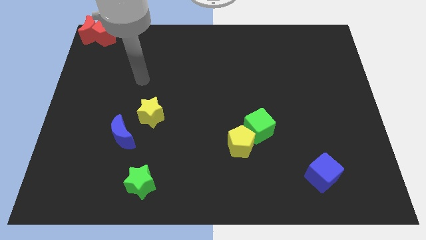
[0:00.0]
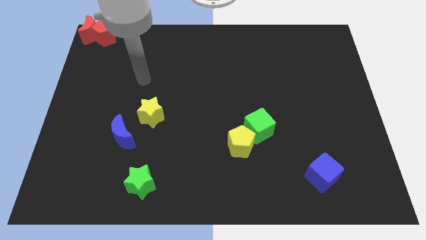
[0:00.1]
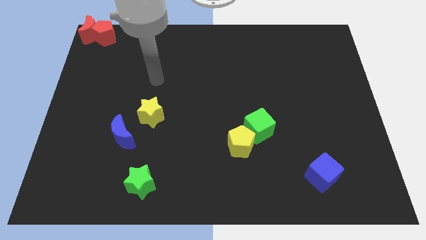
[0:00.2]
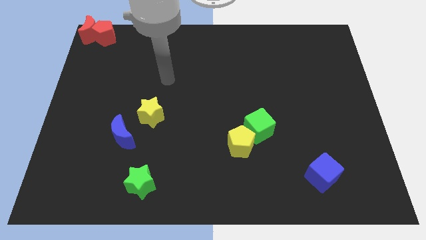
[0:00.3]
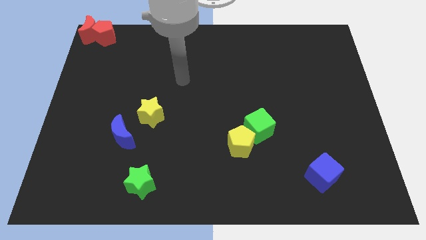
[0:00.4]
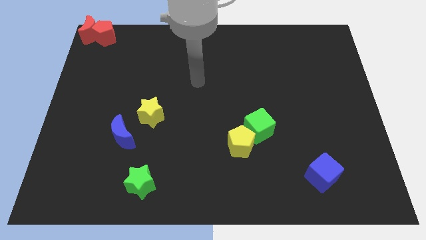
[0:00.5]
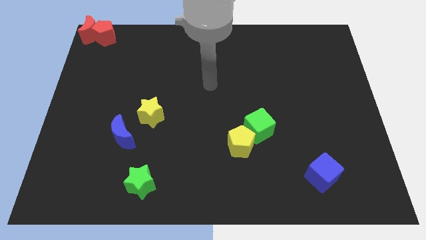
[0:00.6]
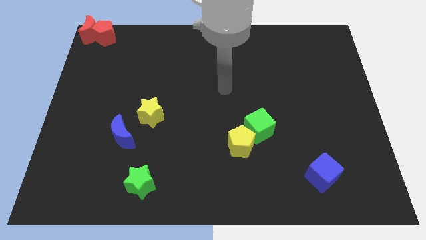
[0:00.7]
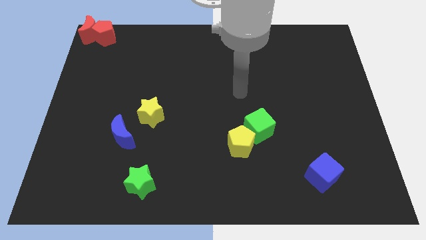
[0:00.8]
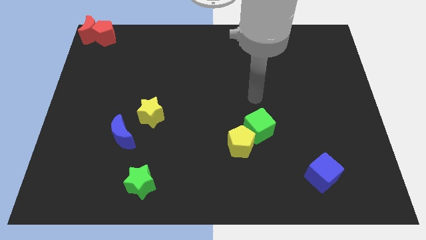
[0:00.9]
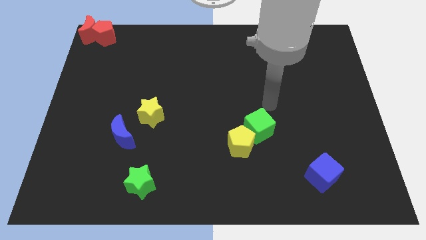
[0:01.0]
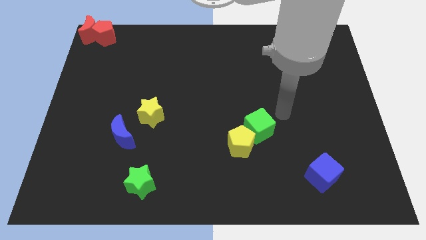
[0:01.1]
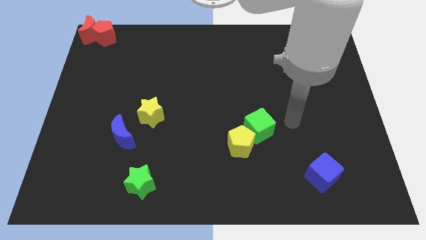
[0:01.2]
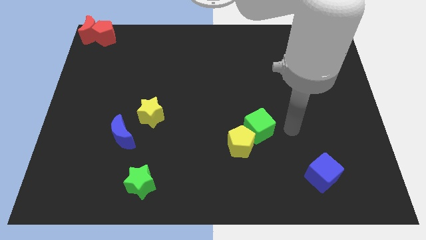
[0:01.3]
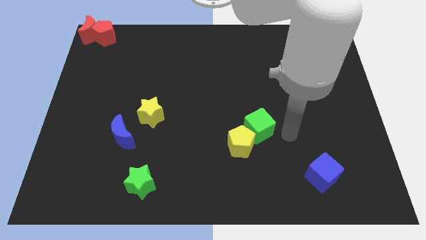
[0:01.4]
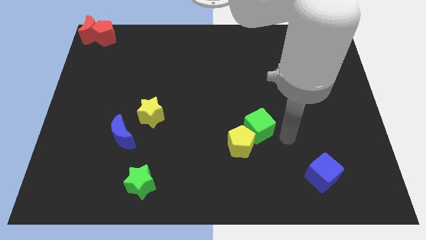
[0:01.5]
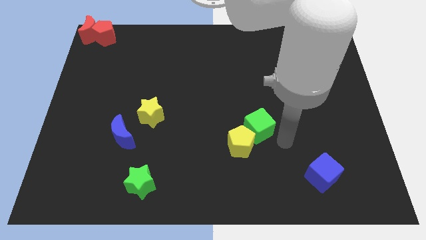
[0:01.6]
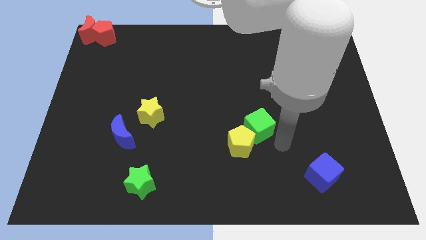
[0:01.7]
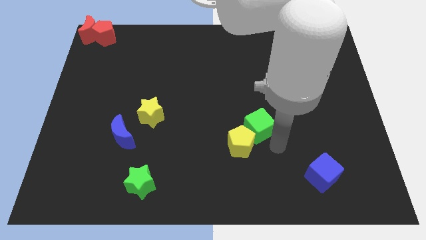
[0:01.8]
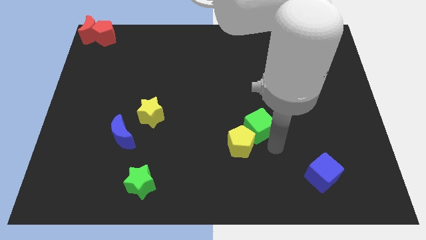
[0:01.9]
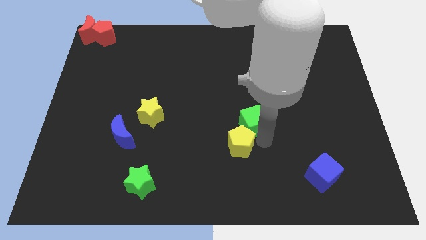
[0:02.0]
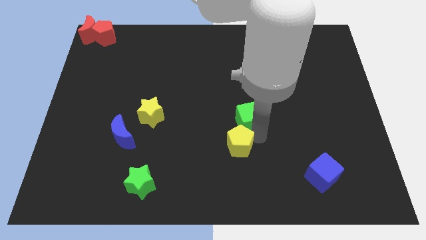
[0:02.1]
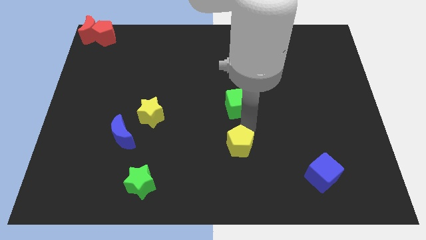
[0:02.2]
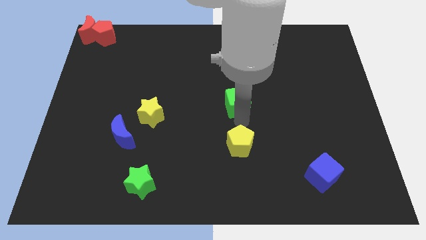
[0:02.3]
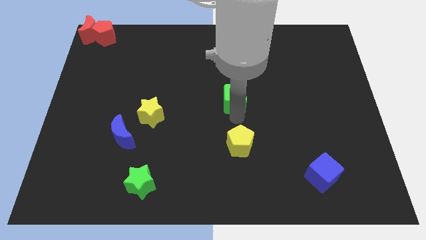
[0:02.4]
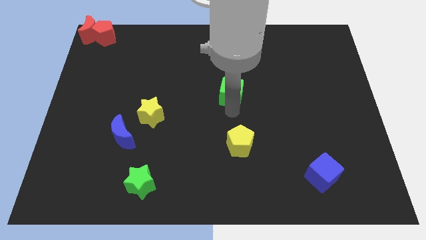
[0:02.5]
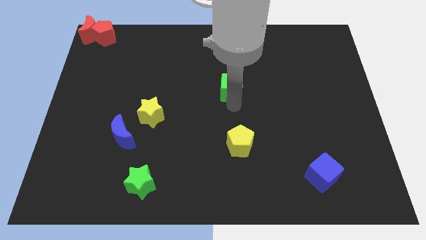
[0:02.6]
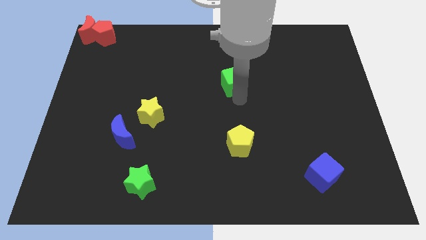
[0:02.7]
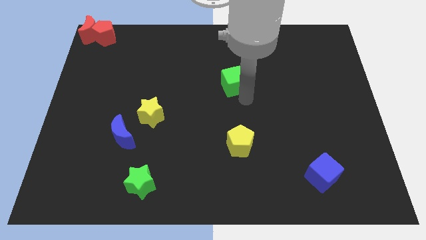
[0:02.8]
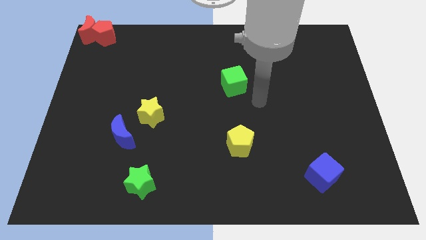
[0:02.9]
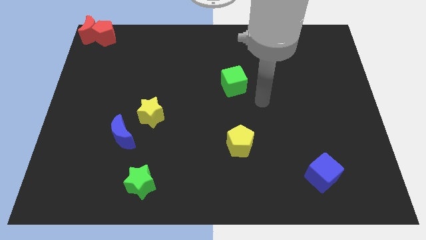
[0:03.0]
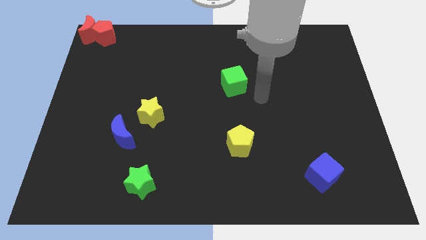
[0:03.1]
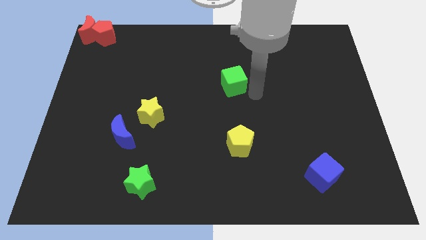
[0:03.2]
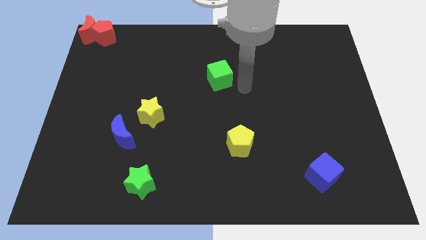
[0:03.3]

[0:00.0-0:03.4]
slide the green cube vertically above the yellow pentagon

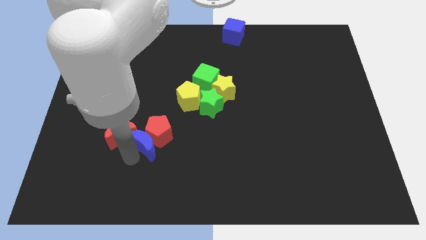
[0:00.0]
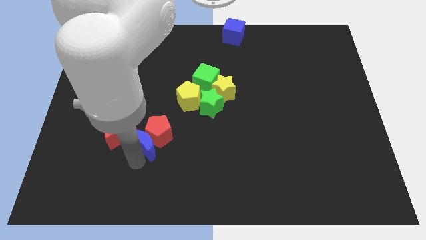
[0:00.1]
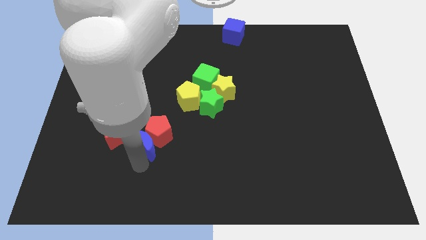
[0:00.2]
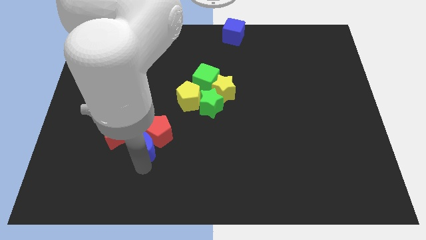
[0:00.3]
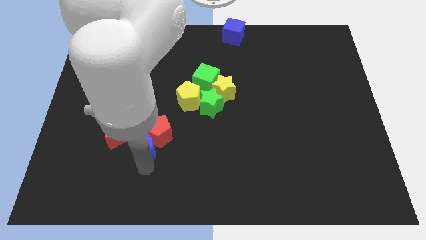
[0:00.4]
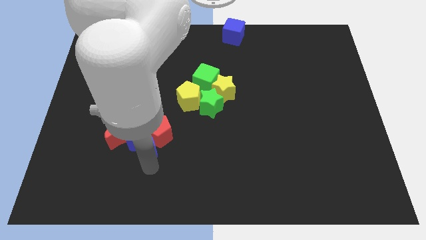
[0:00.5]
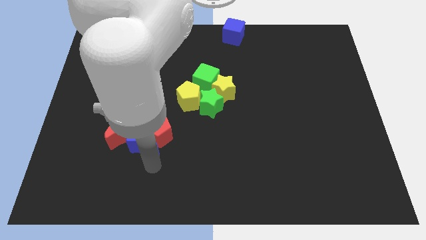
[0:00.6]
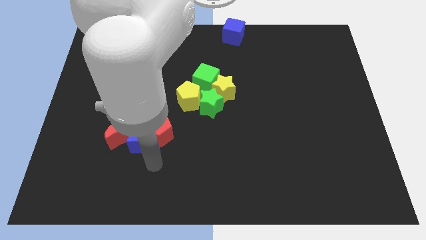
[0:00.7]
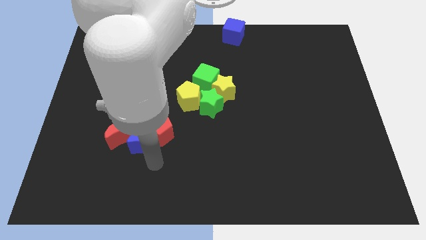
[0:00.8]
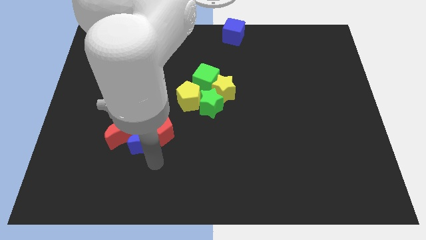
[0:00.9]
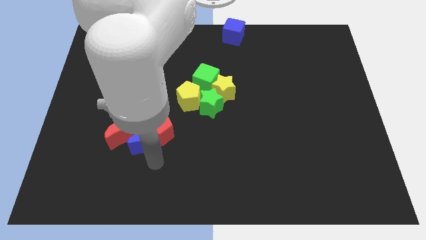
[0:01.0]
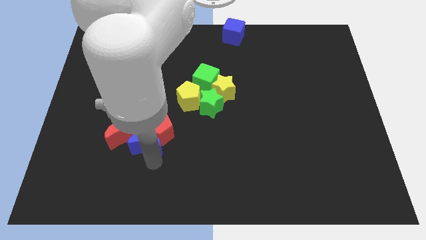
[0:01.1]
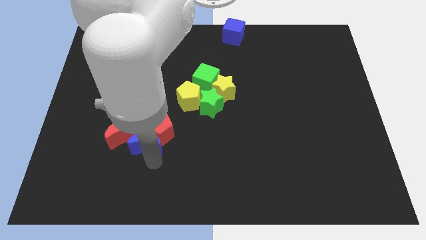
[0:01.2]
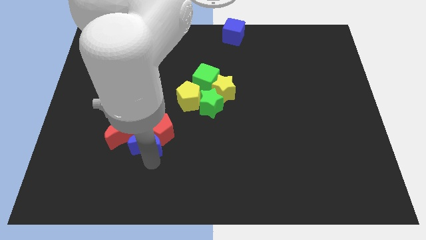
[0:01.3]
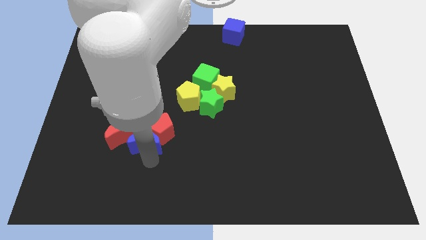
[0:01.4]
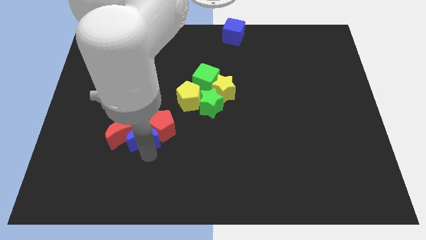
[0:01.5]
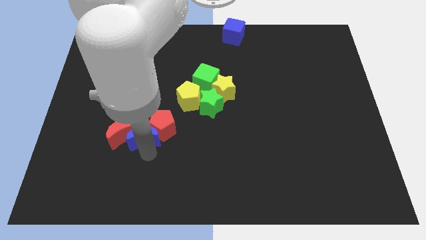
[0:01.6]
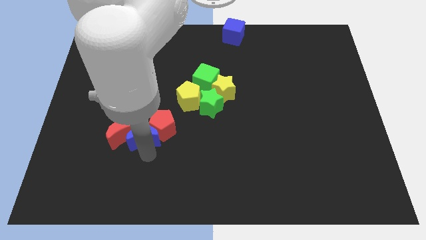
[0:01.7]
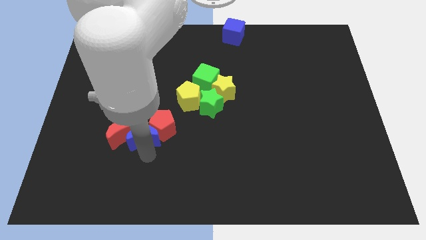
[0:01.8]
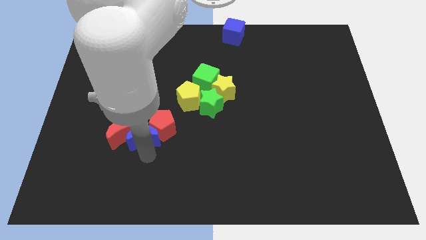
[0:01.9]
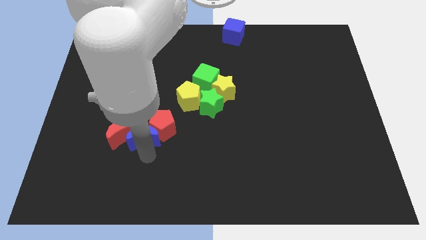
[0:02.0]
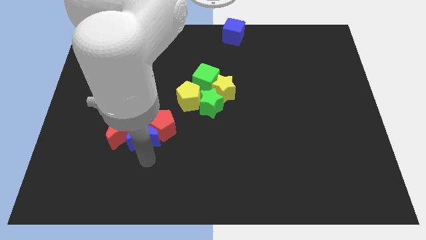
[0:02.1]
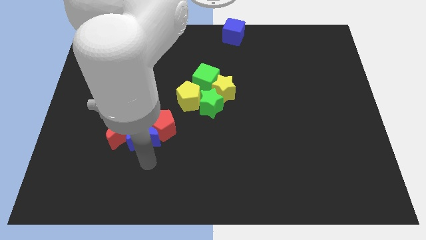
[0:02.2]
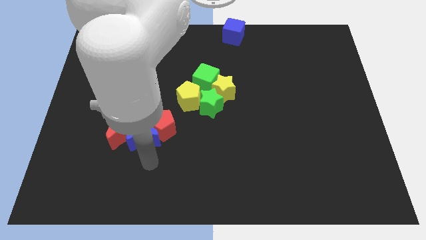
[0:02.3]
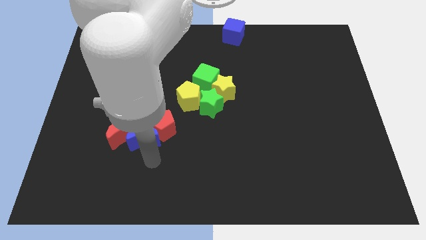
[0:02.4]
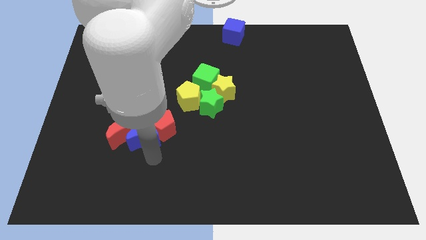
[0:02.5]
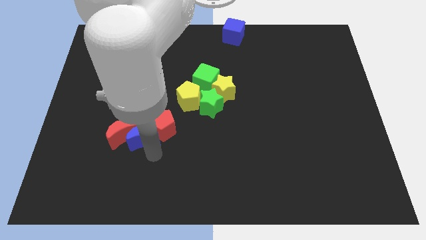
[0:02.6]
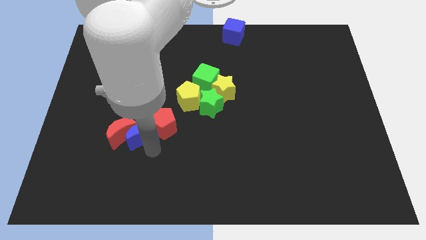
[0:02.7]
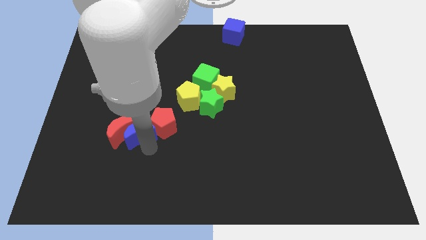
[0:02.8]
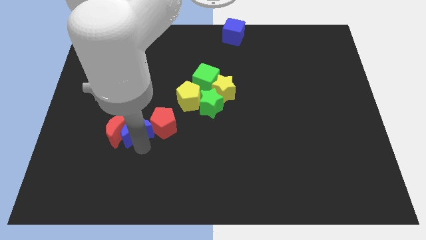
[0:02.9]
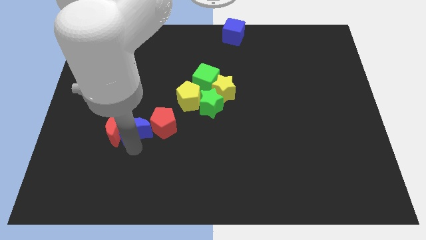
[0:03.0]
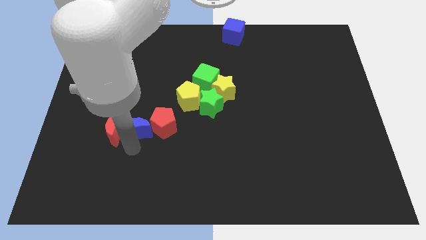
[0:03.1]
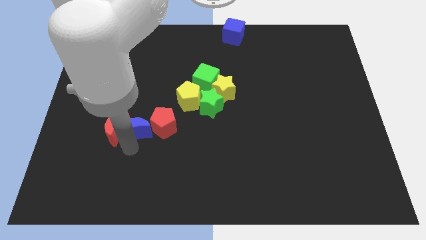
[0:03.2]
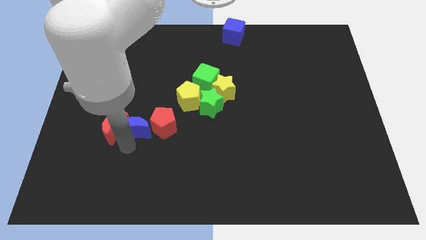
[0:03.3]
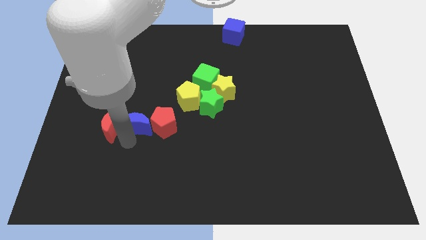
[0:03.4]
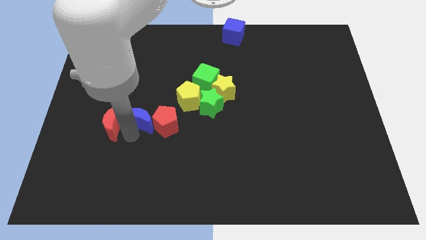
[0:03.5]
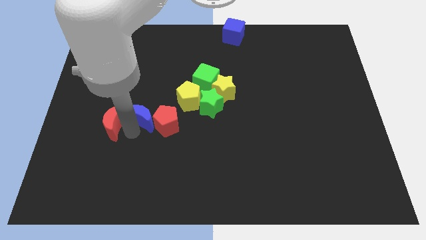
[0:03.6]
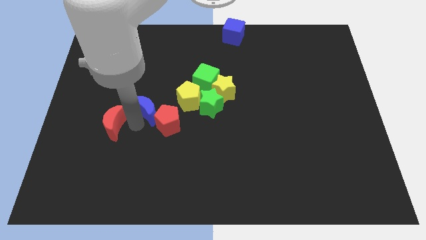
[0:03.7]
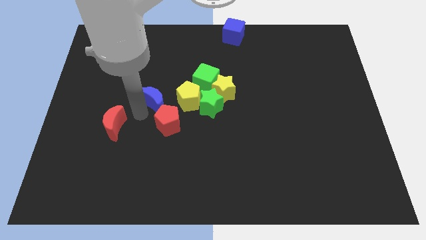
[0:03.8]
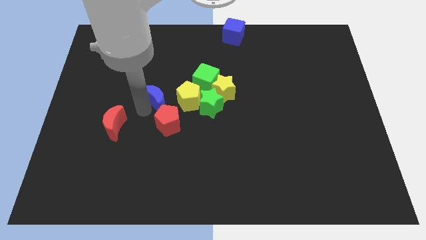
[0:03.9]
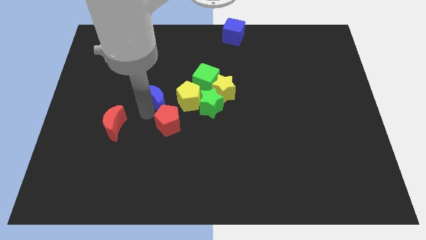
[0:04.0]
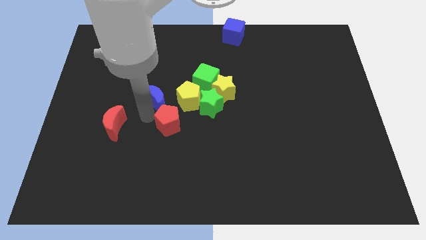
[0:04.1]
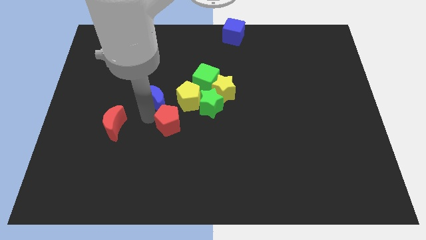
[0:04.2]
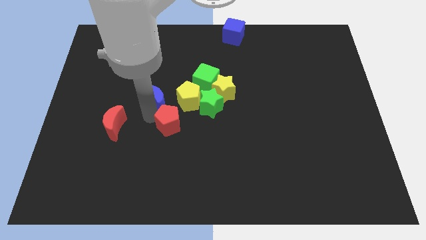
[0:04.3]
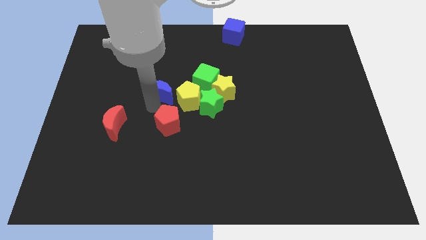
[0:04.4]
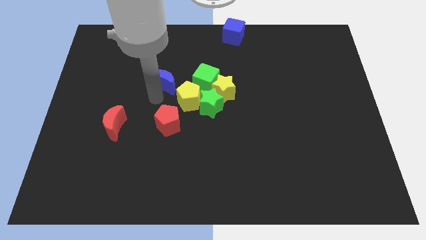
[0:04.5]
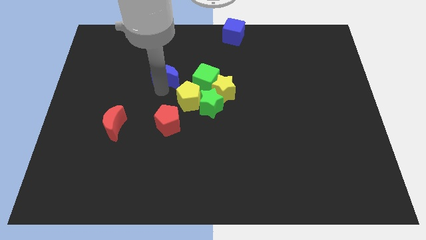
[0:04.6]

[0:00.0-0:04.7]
place blue moon above the red pentagon

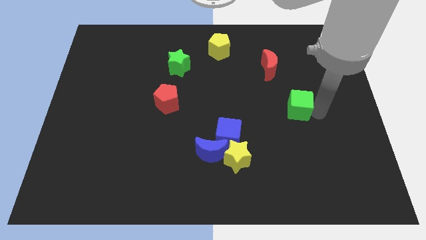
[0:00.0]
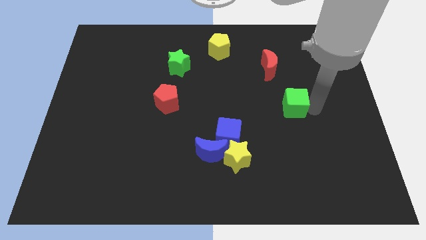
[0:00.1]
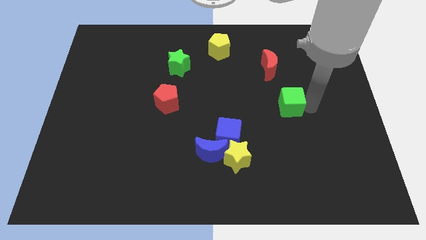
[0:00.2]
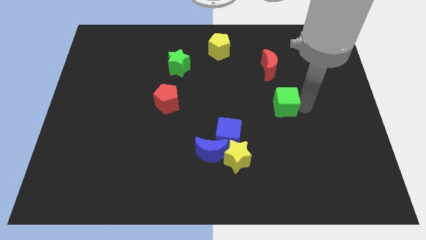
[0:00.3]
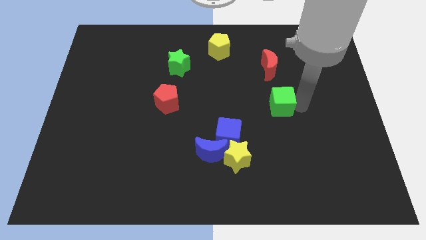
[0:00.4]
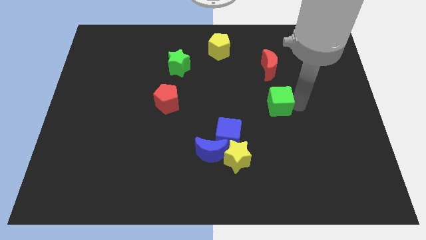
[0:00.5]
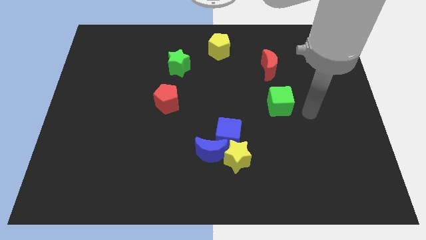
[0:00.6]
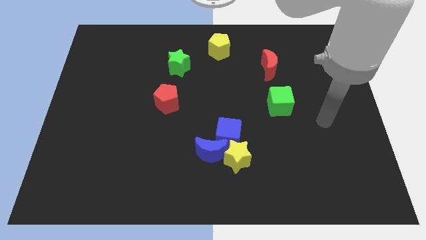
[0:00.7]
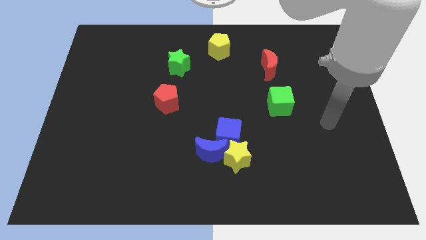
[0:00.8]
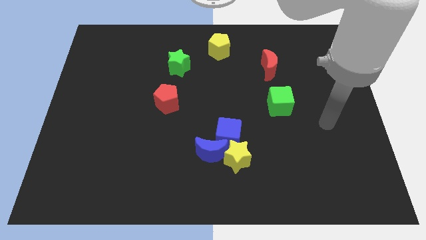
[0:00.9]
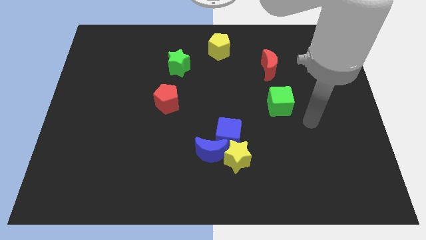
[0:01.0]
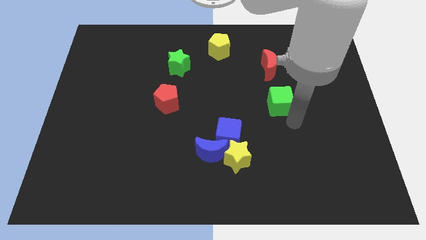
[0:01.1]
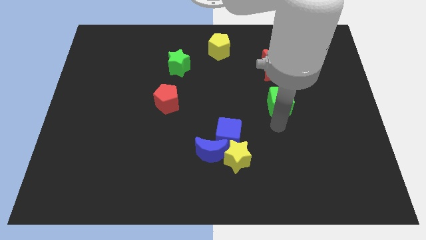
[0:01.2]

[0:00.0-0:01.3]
move the green cube to the bottom of the red crescent
